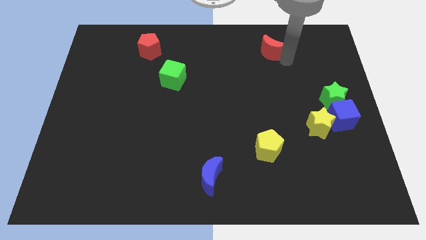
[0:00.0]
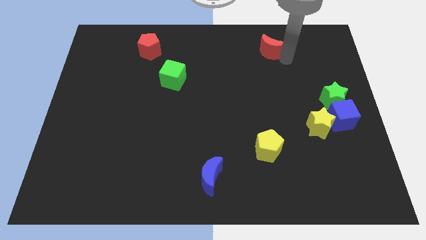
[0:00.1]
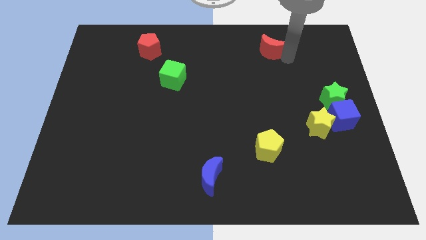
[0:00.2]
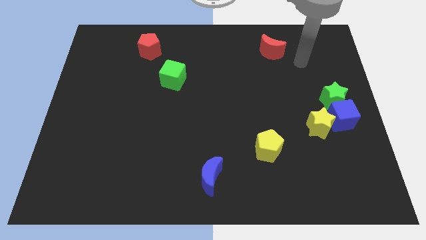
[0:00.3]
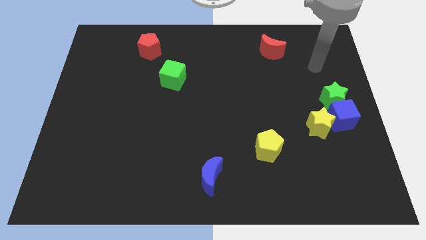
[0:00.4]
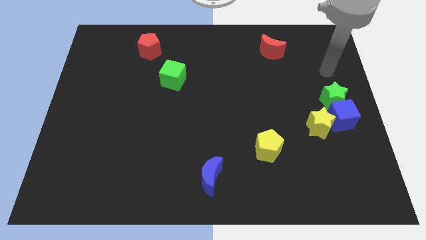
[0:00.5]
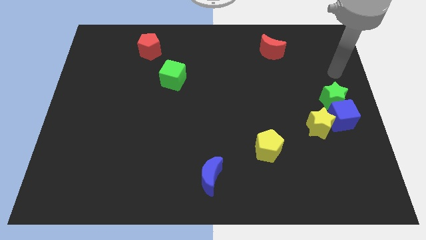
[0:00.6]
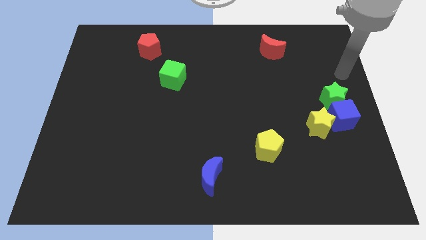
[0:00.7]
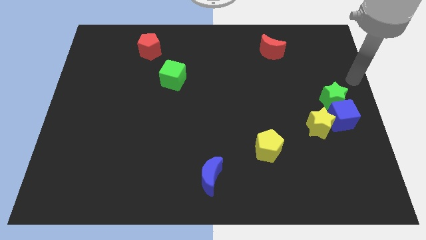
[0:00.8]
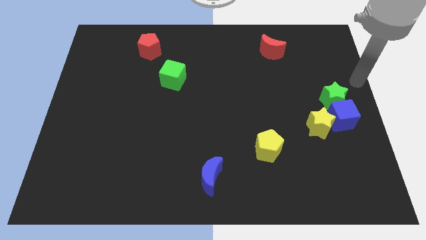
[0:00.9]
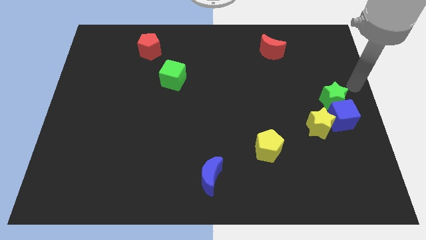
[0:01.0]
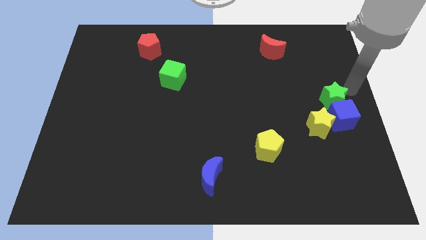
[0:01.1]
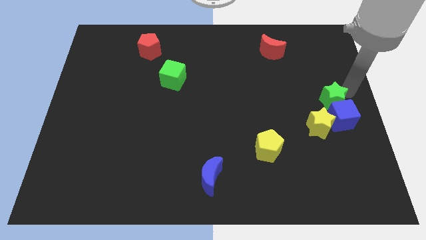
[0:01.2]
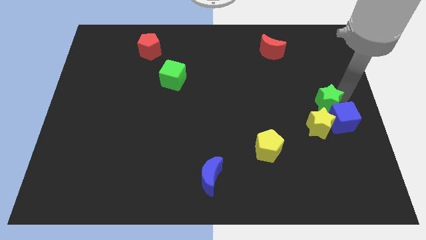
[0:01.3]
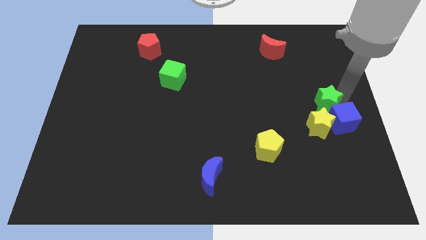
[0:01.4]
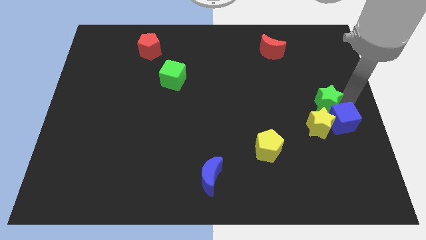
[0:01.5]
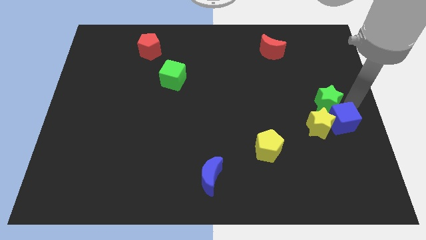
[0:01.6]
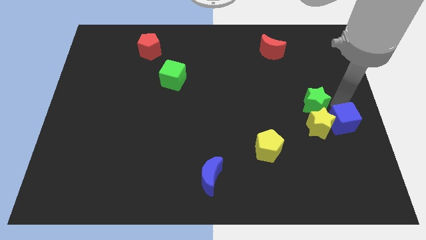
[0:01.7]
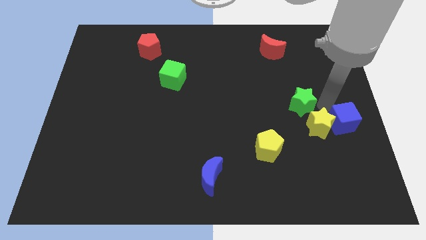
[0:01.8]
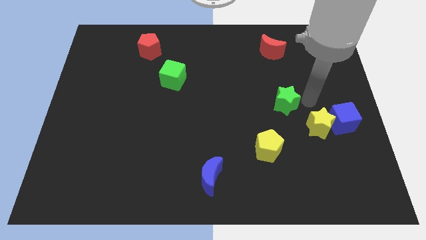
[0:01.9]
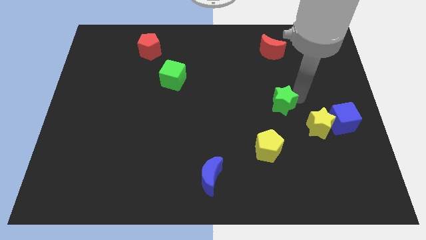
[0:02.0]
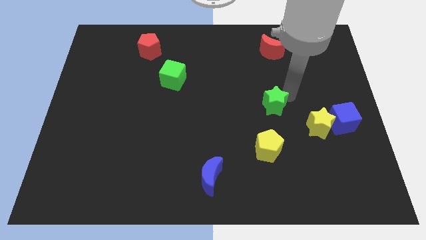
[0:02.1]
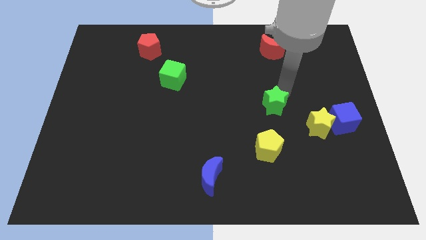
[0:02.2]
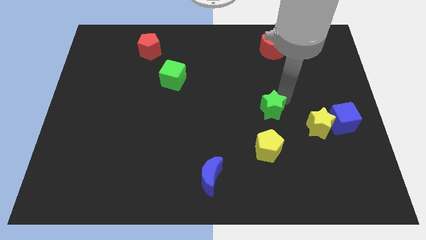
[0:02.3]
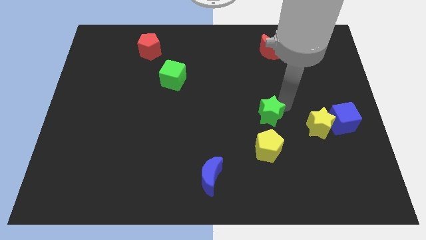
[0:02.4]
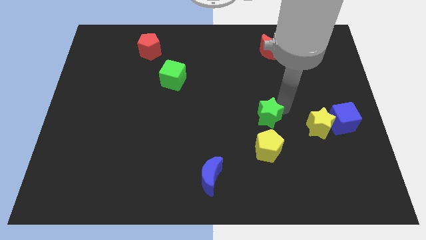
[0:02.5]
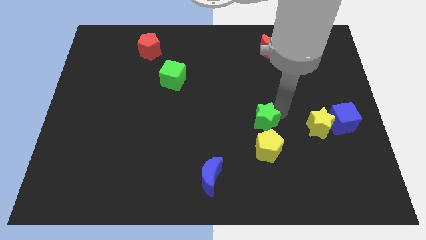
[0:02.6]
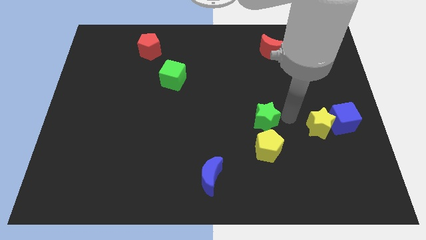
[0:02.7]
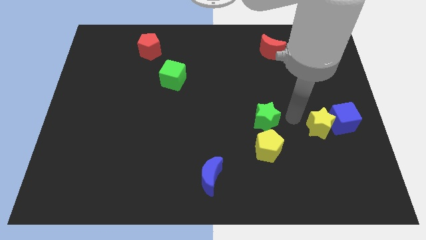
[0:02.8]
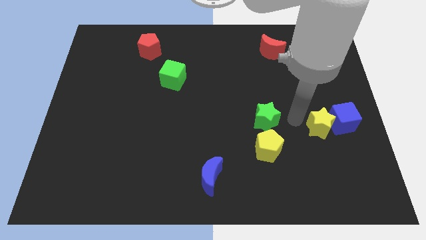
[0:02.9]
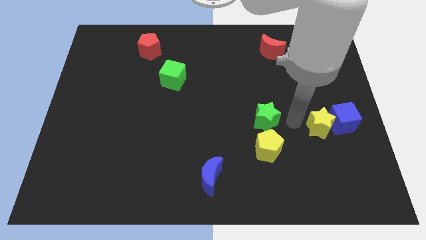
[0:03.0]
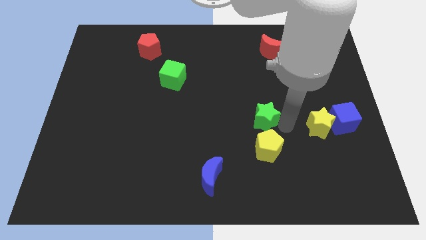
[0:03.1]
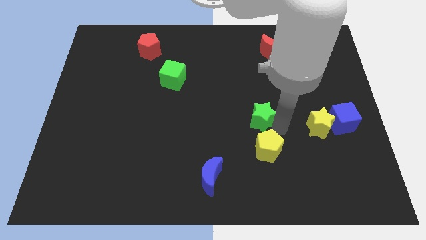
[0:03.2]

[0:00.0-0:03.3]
place green star on top of yellow pentagon

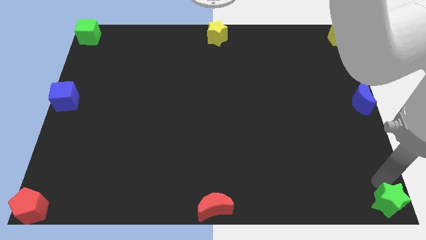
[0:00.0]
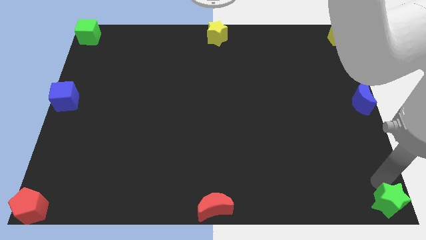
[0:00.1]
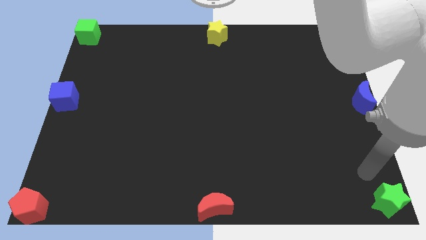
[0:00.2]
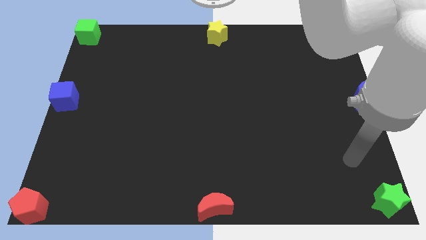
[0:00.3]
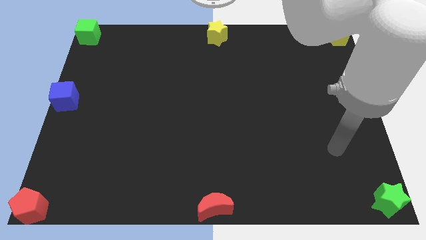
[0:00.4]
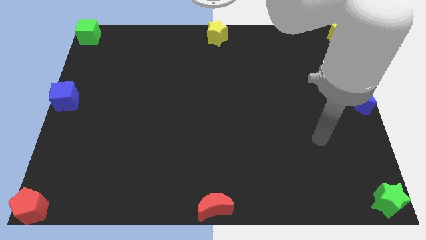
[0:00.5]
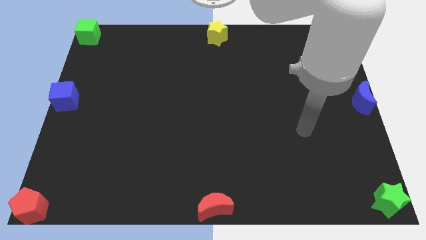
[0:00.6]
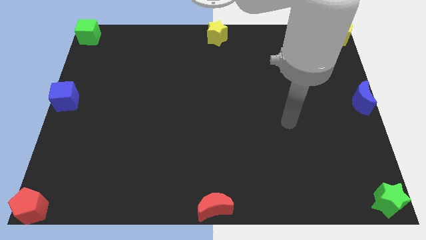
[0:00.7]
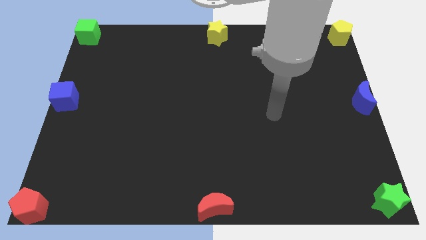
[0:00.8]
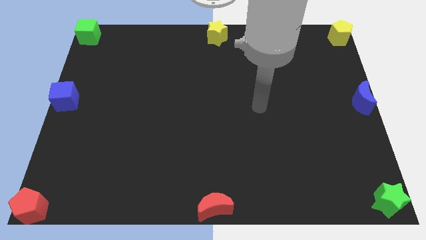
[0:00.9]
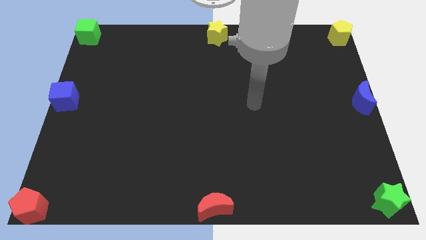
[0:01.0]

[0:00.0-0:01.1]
move the arm diagonally up

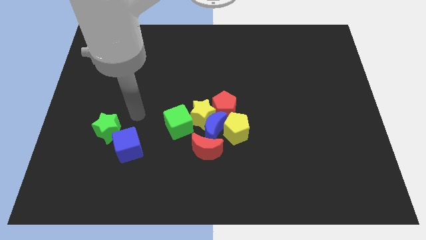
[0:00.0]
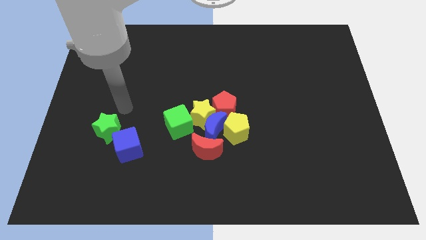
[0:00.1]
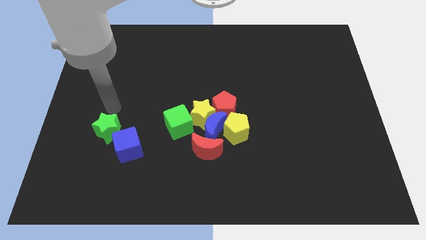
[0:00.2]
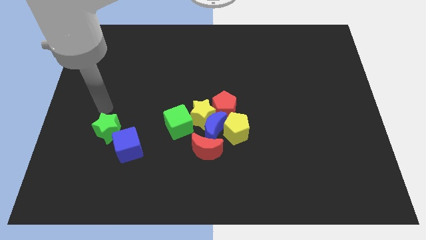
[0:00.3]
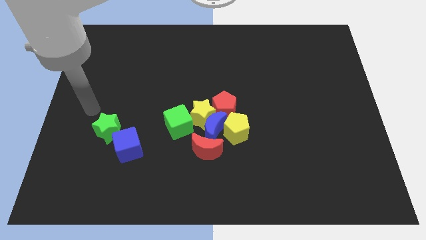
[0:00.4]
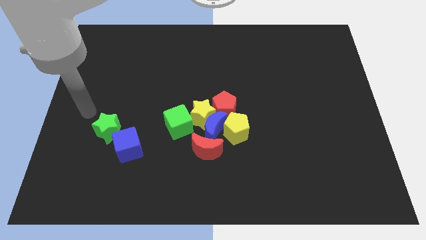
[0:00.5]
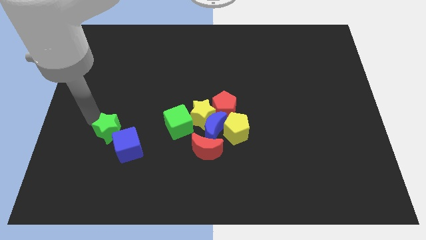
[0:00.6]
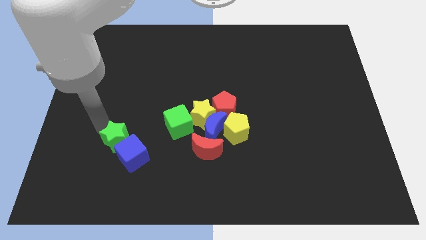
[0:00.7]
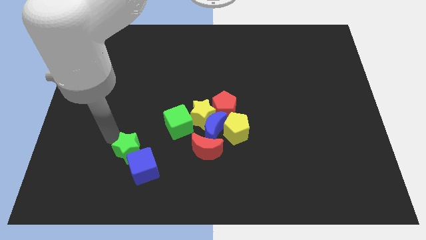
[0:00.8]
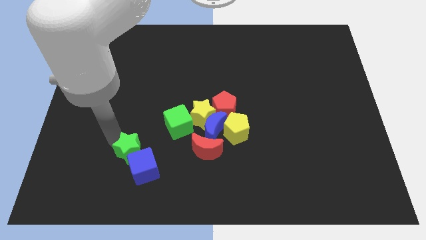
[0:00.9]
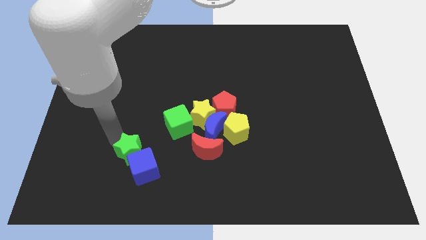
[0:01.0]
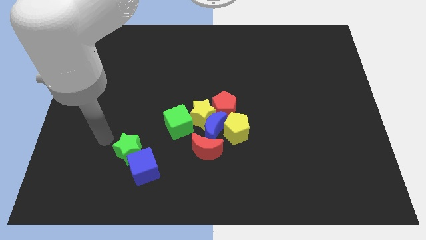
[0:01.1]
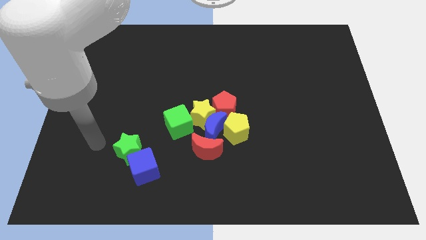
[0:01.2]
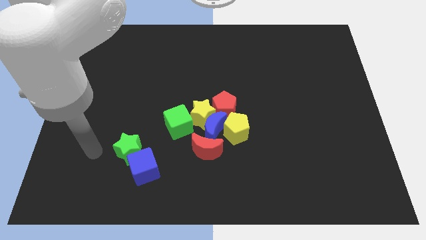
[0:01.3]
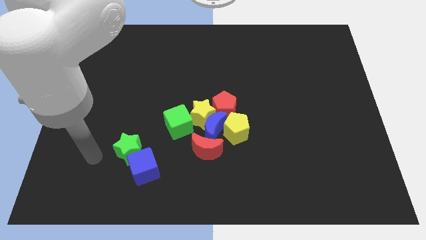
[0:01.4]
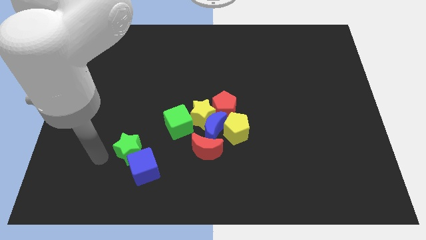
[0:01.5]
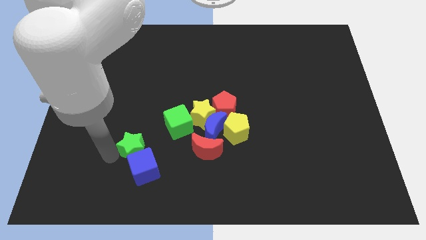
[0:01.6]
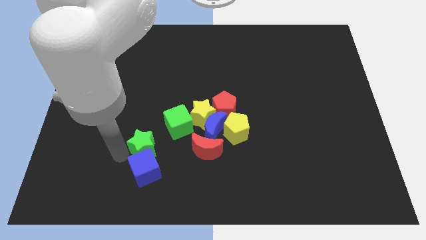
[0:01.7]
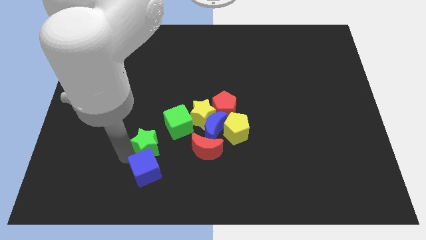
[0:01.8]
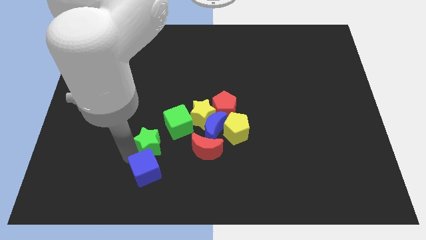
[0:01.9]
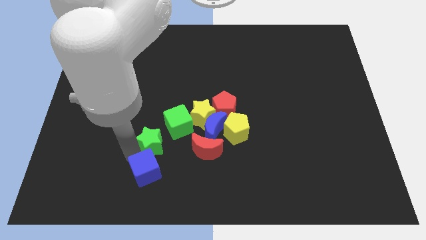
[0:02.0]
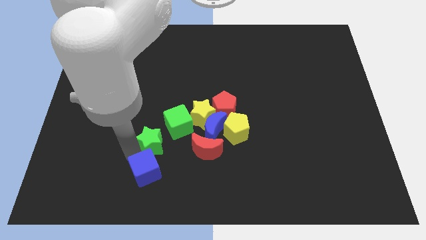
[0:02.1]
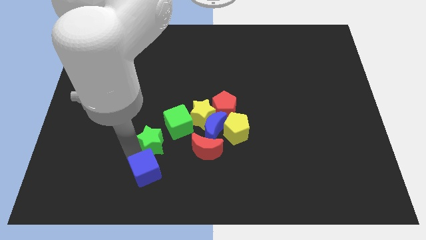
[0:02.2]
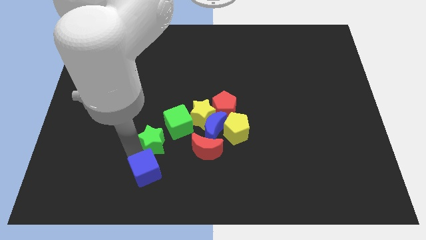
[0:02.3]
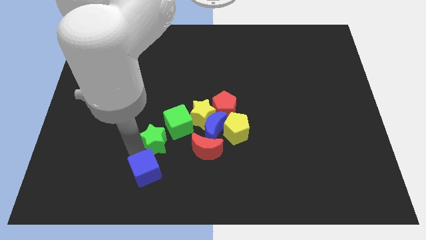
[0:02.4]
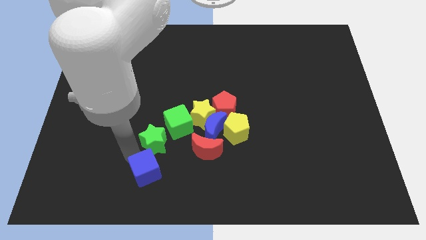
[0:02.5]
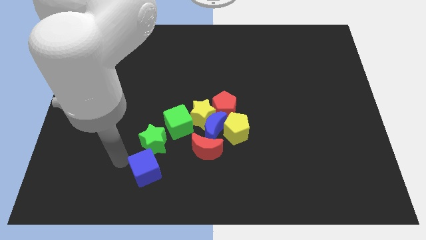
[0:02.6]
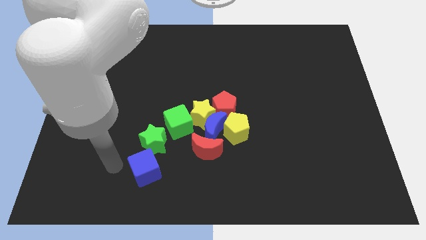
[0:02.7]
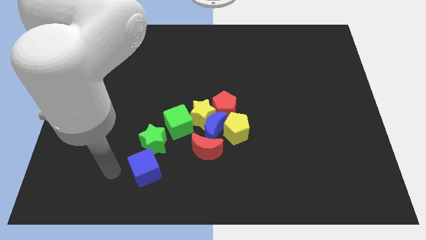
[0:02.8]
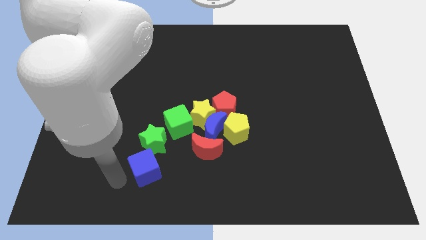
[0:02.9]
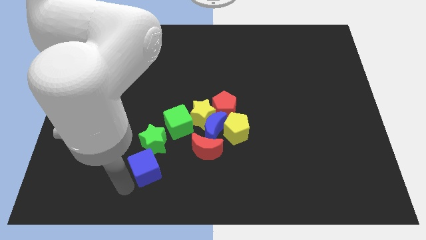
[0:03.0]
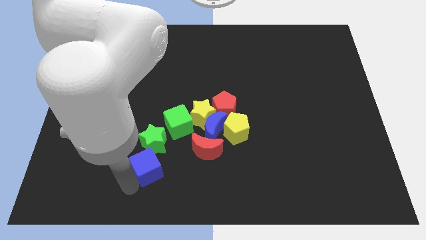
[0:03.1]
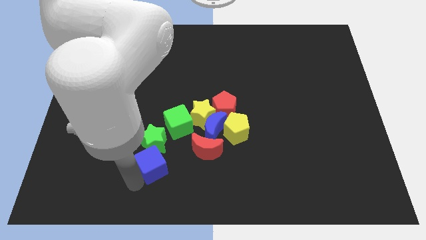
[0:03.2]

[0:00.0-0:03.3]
move the green star to the bottom left of the green cube

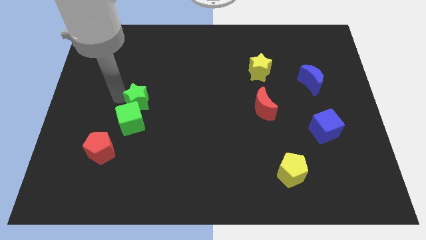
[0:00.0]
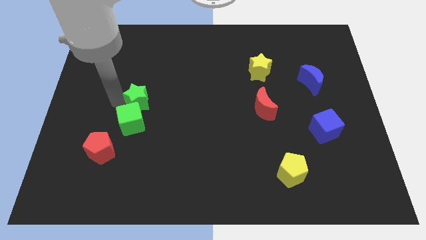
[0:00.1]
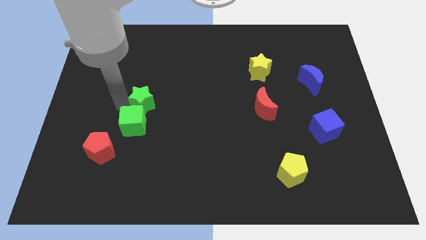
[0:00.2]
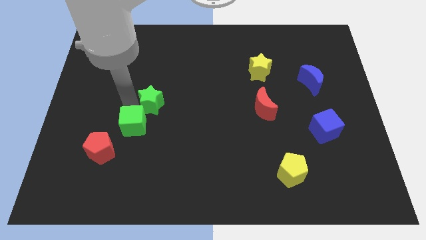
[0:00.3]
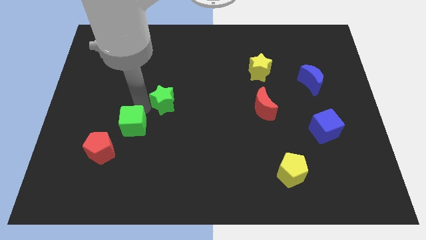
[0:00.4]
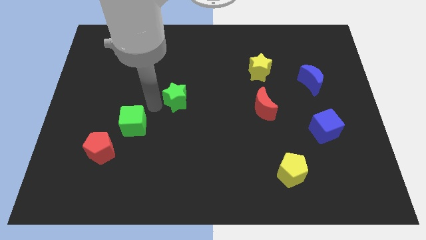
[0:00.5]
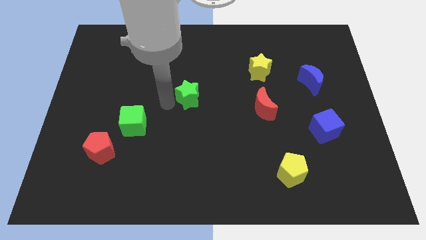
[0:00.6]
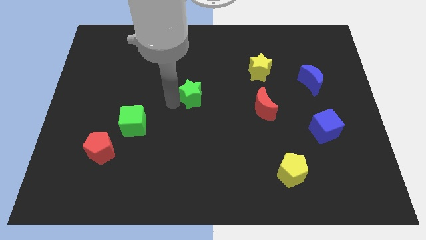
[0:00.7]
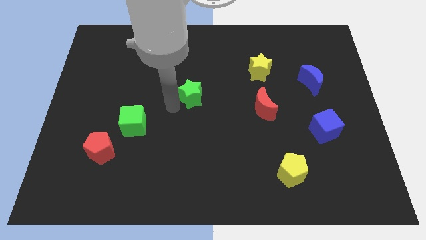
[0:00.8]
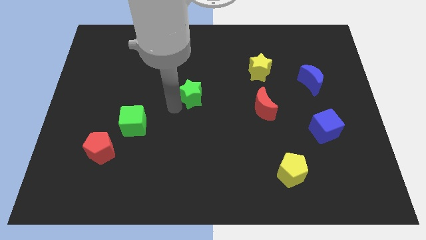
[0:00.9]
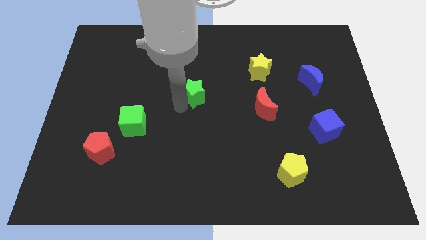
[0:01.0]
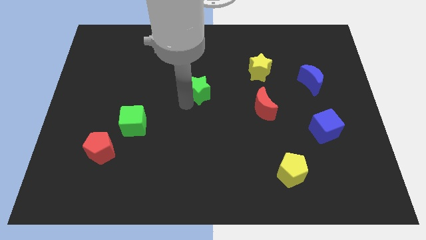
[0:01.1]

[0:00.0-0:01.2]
move the green star between green cube and yellow star
